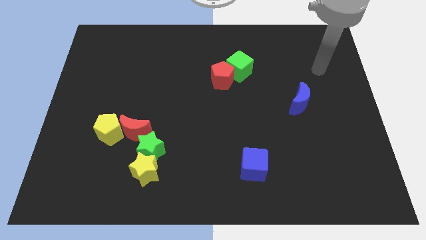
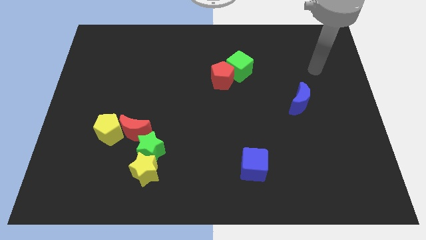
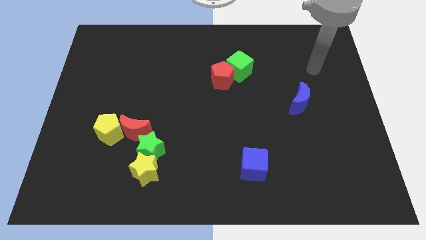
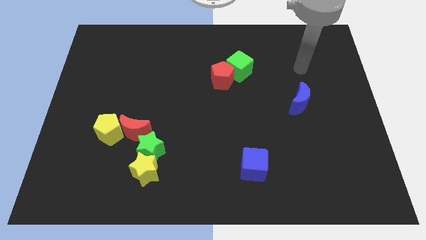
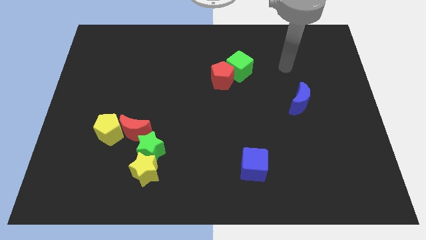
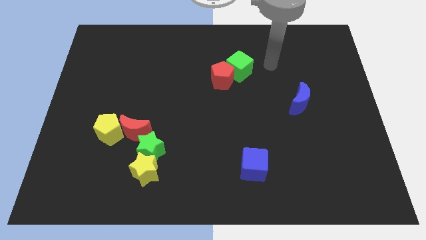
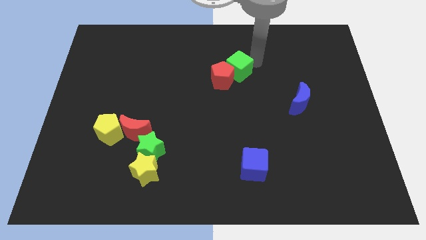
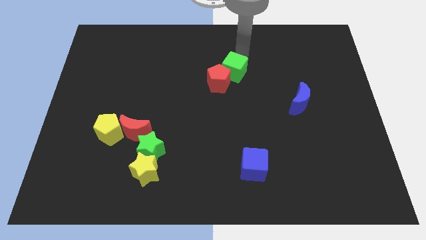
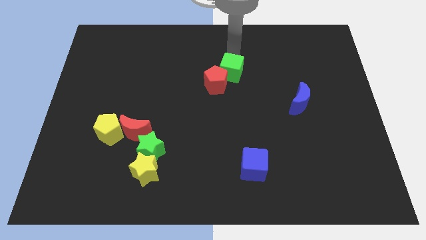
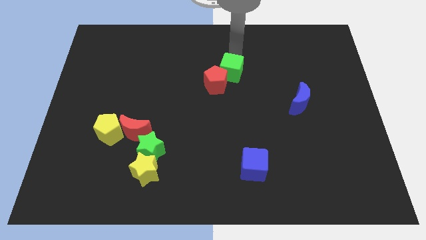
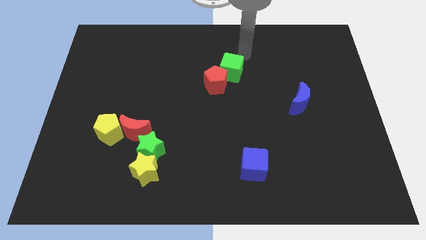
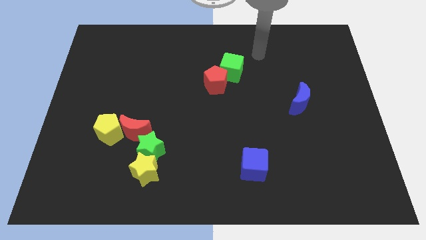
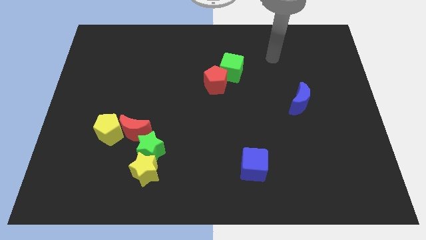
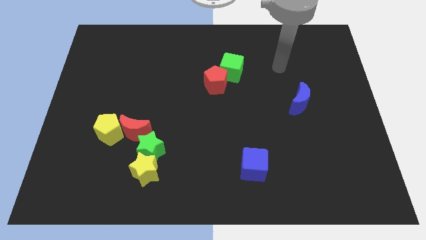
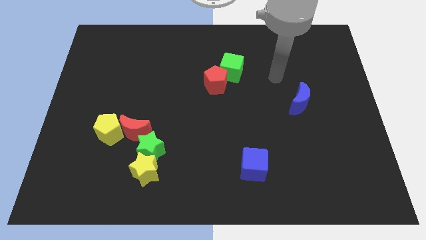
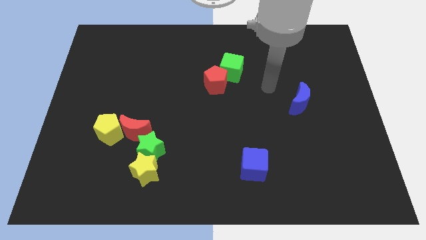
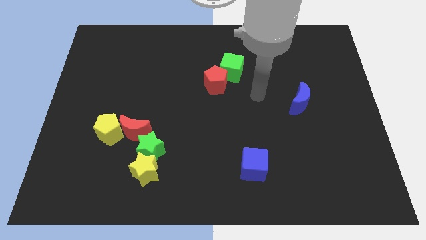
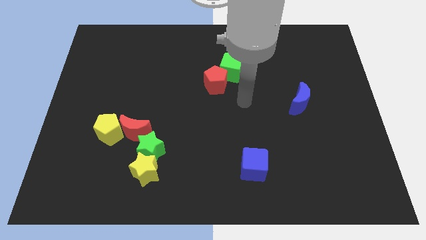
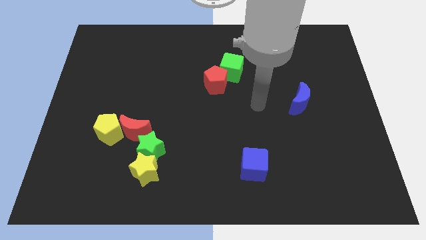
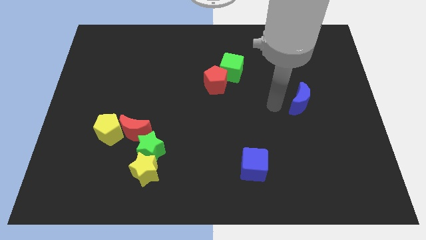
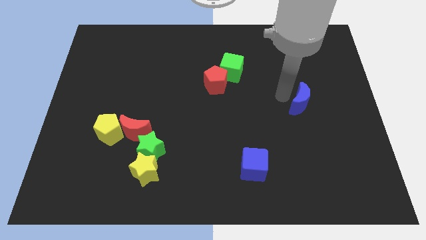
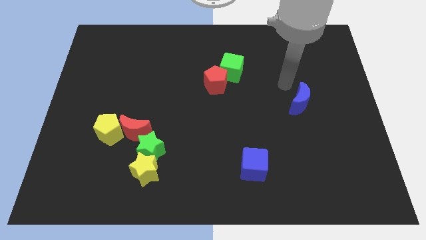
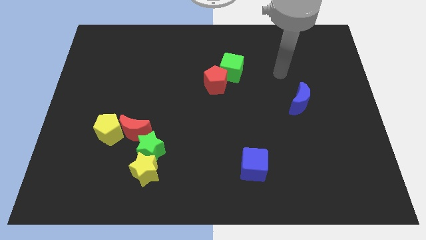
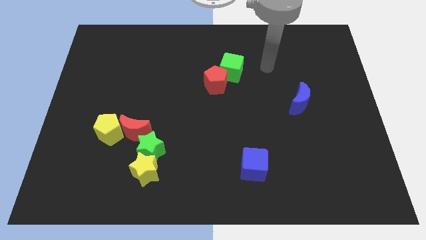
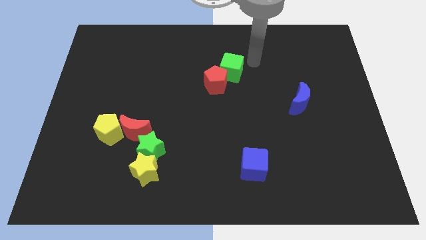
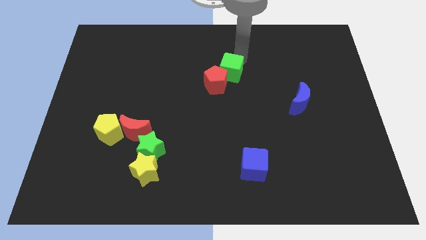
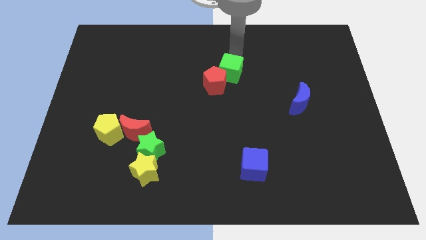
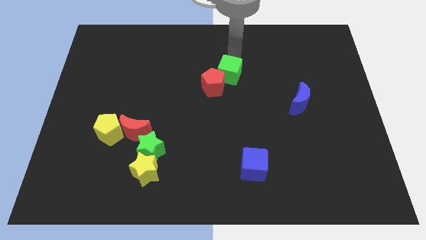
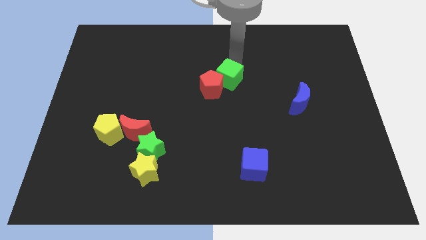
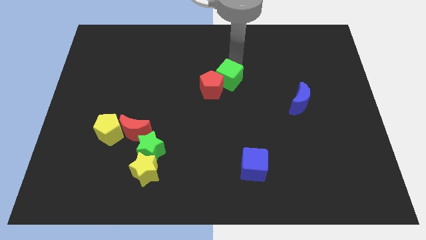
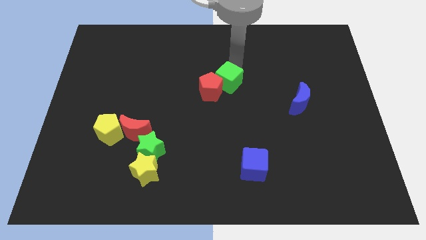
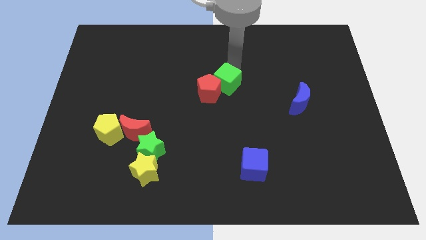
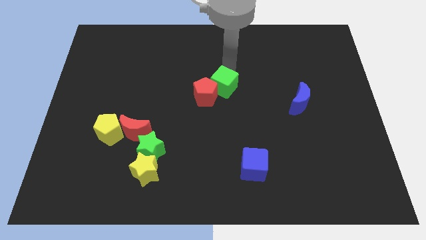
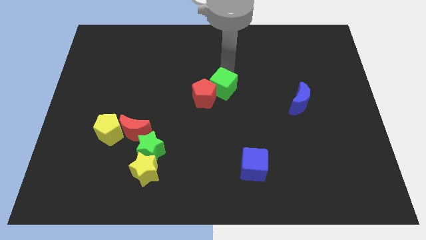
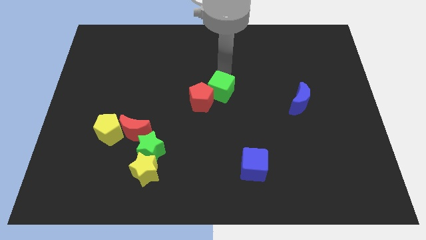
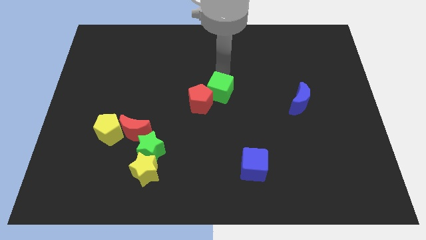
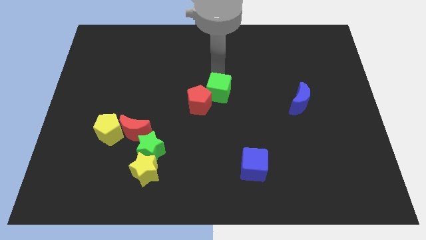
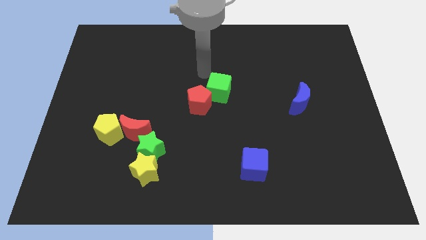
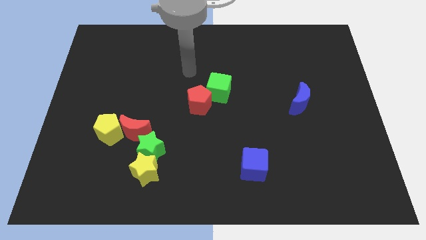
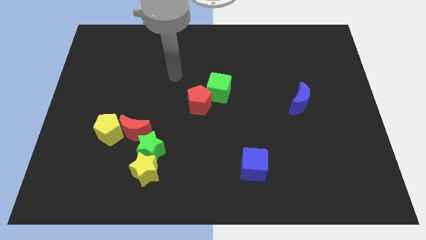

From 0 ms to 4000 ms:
push the green cube along with red pentagon to the center of the board

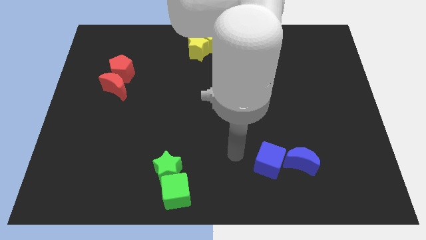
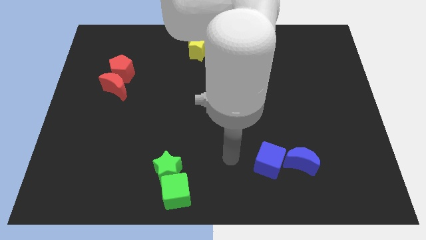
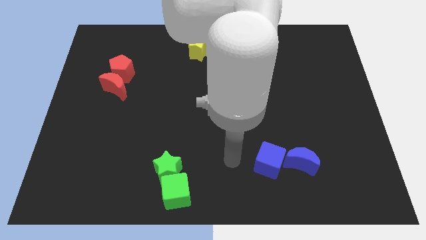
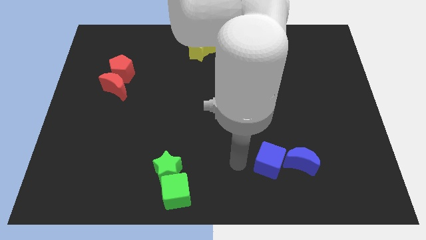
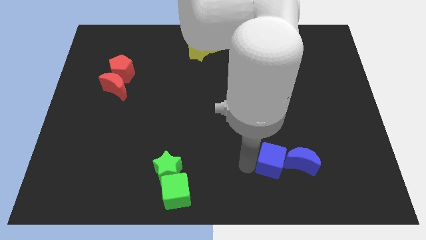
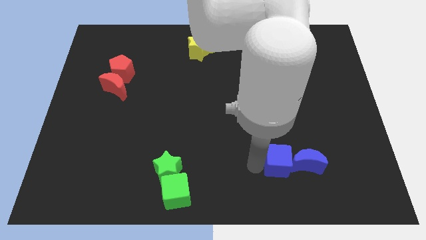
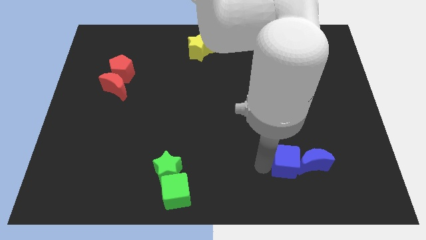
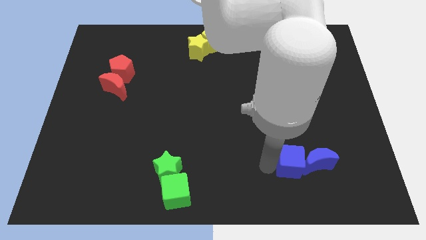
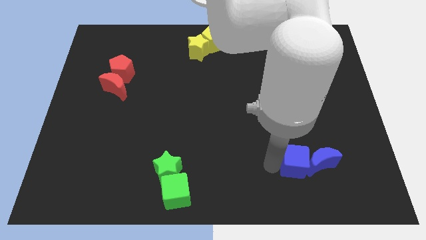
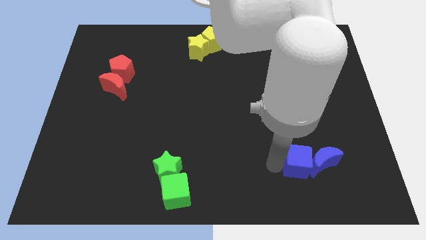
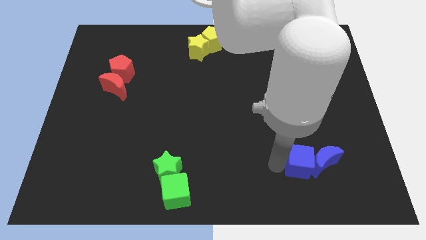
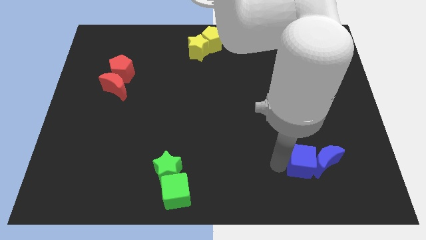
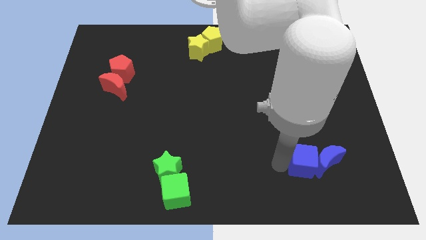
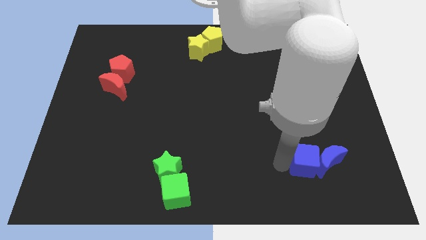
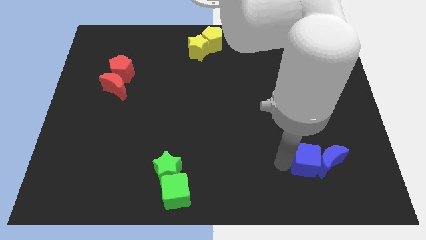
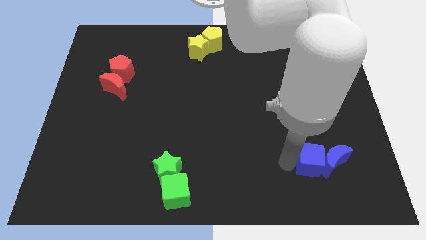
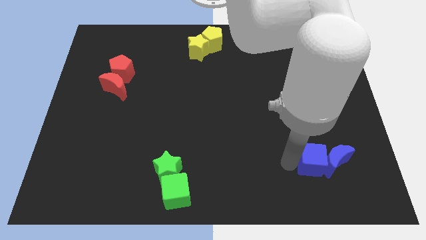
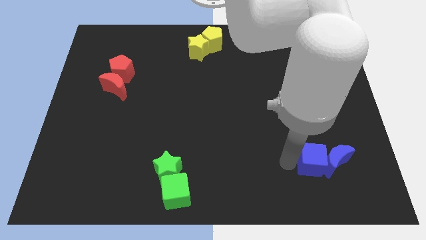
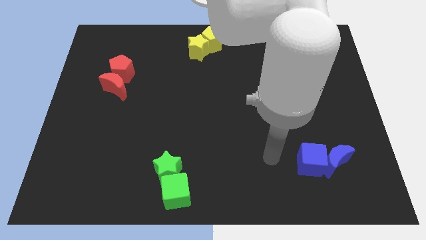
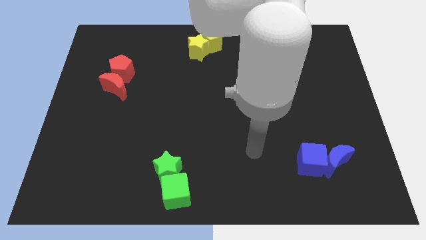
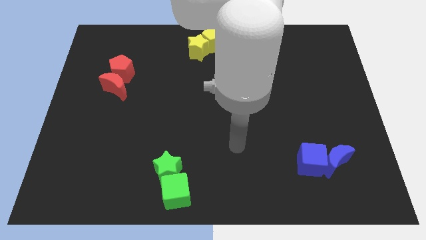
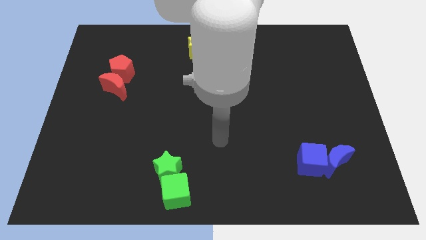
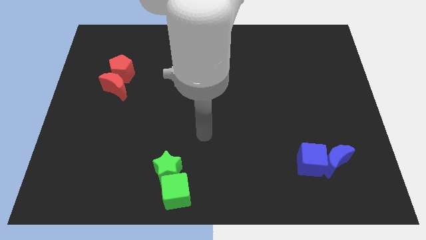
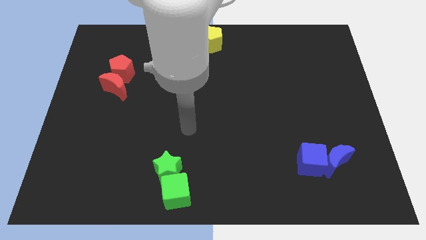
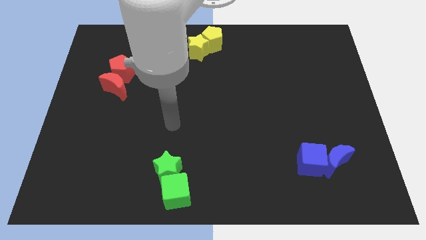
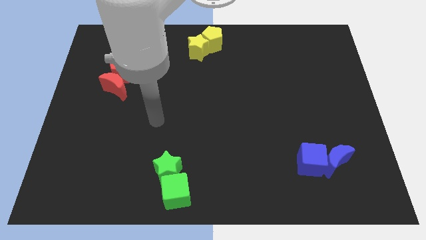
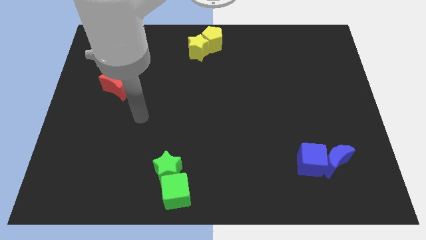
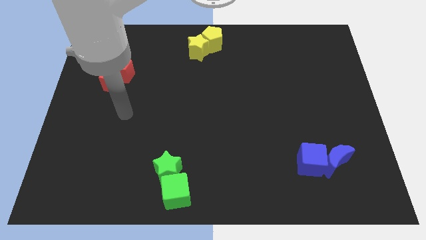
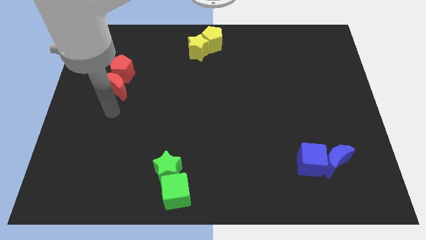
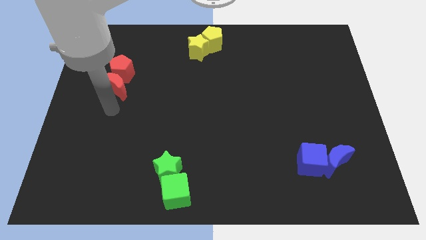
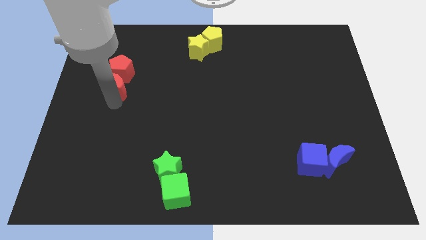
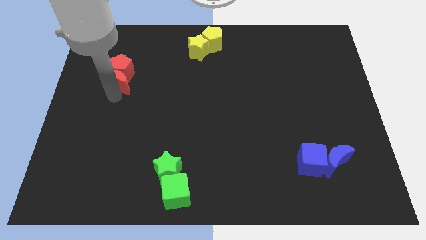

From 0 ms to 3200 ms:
move the blue blocks slightly right

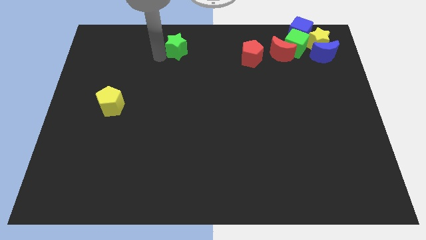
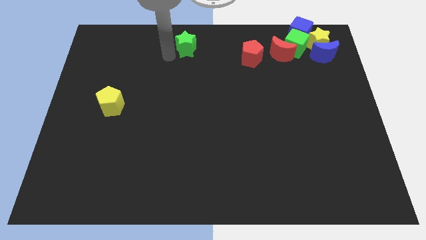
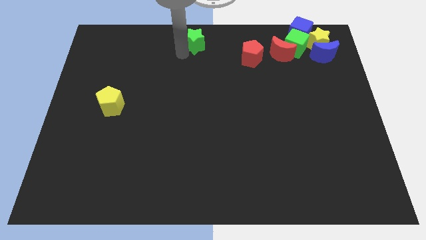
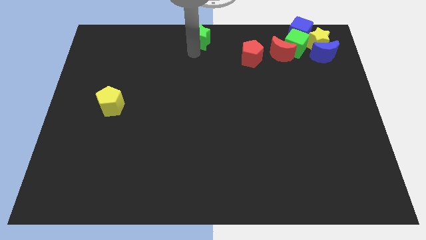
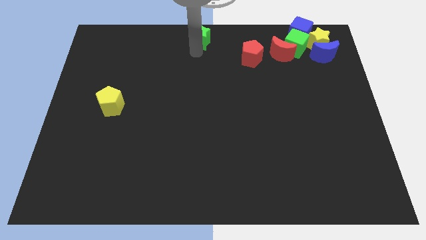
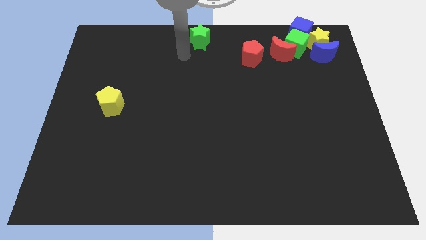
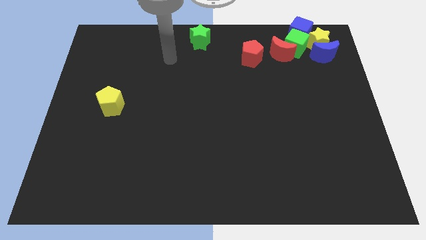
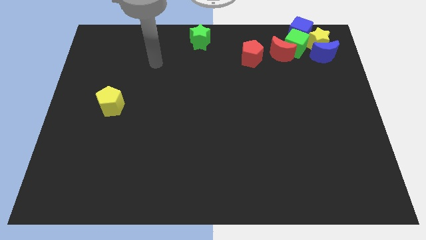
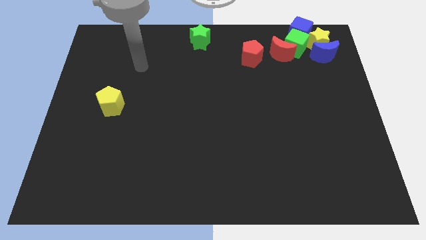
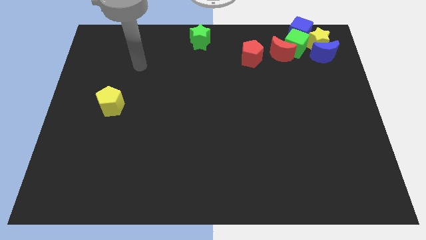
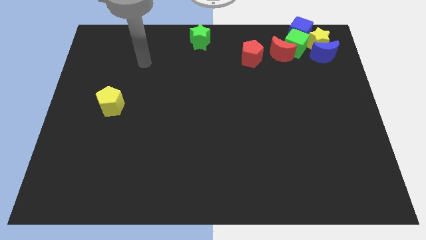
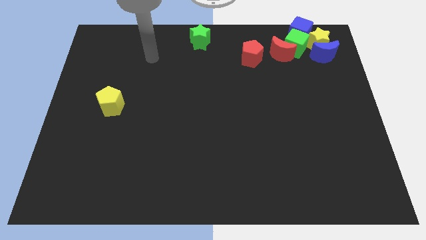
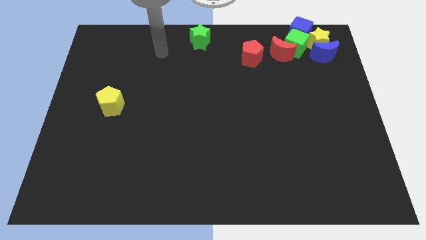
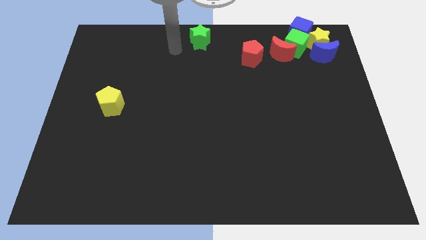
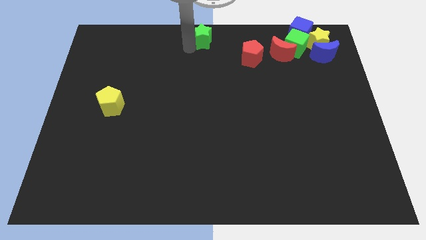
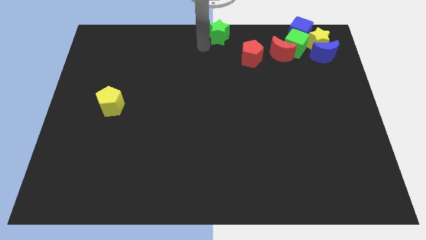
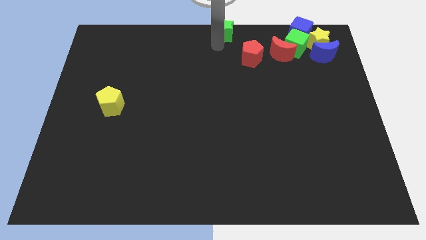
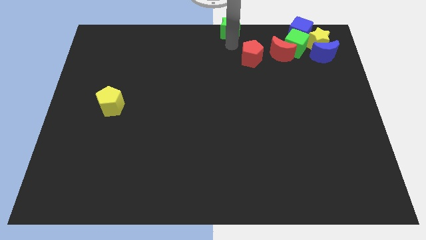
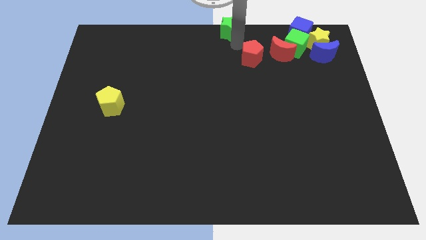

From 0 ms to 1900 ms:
slide the green star to the top center of the board
